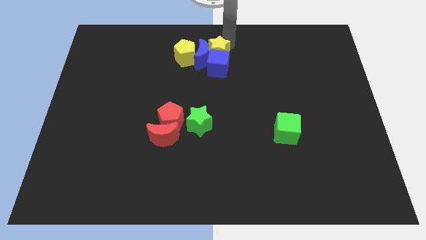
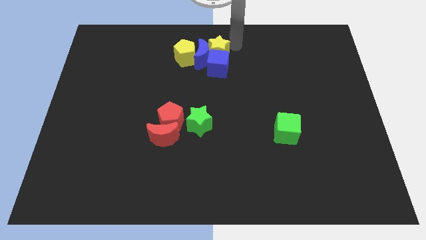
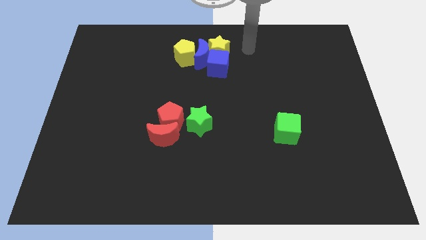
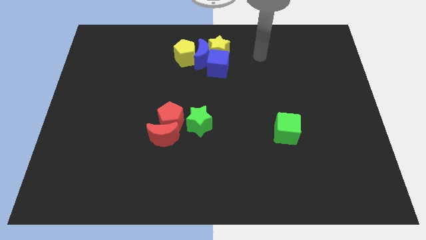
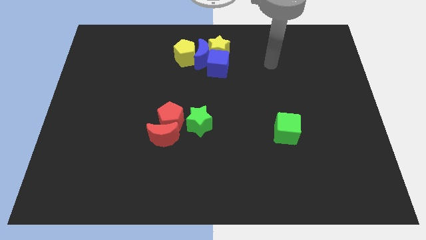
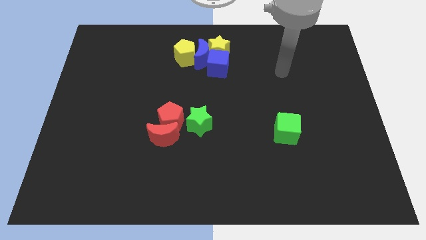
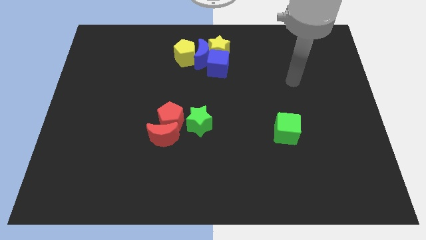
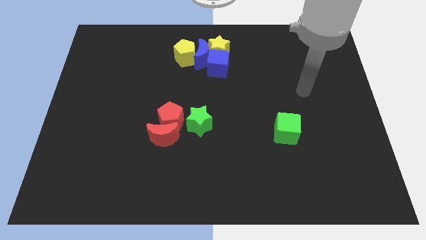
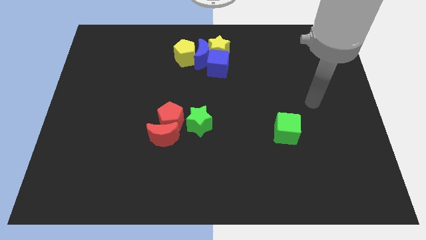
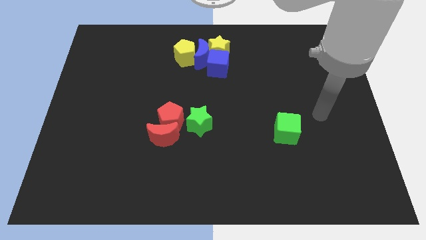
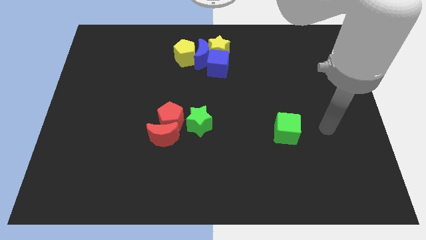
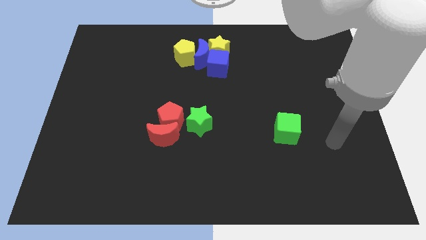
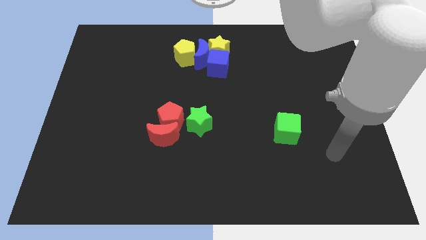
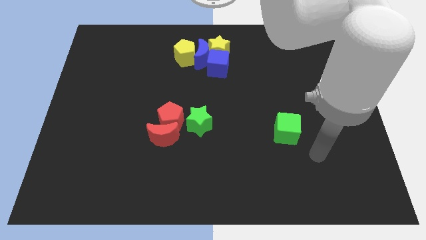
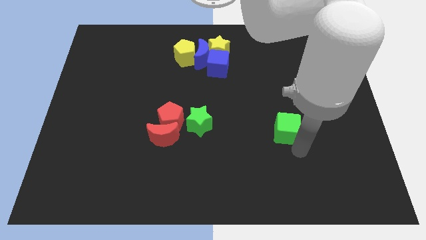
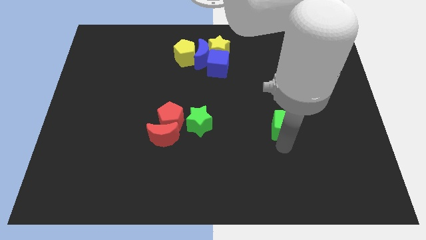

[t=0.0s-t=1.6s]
tab the bottom side of the green cube

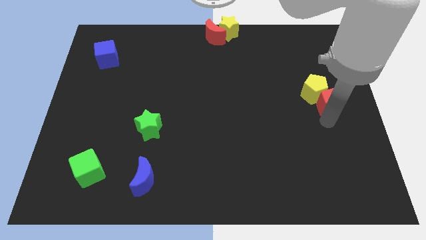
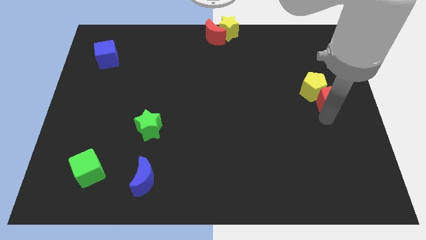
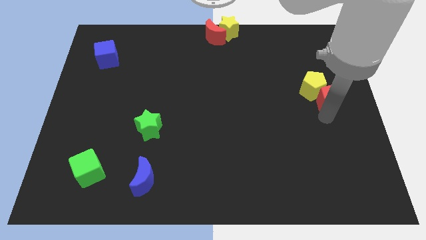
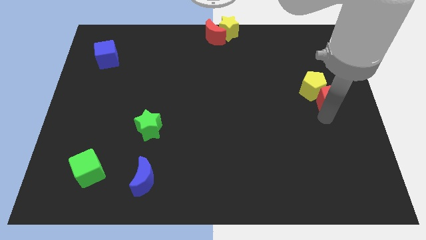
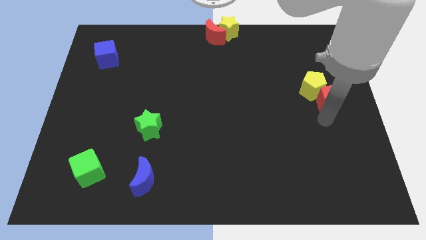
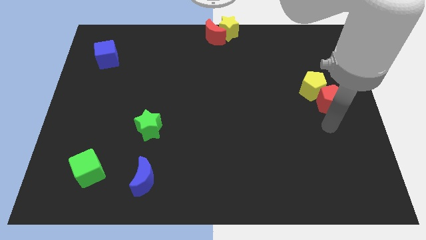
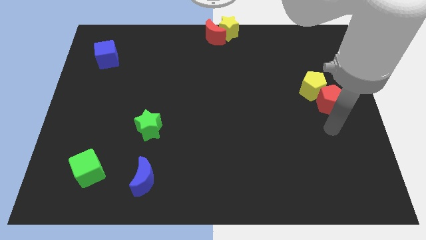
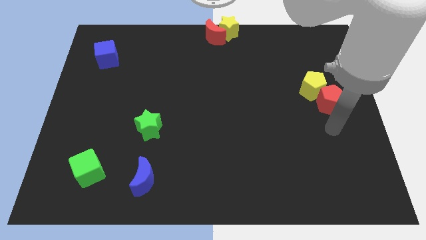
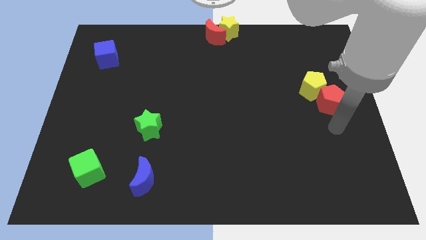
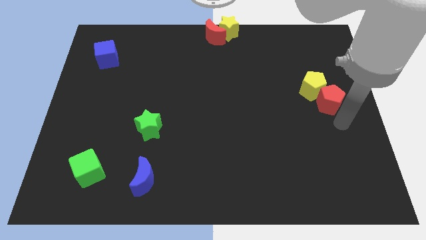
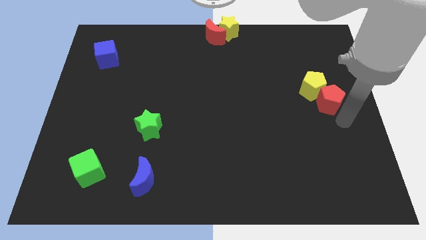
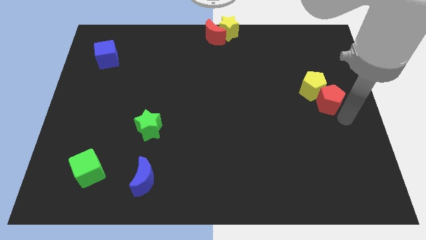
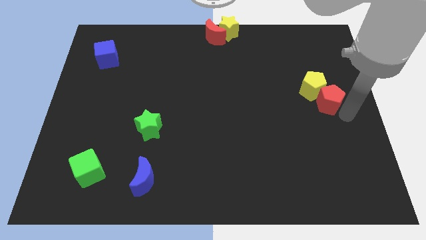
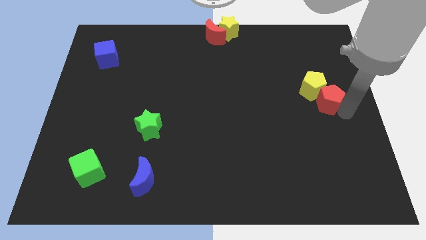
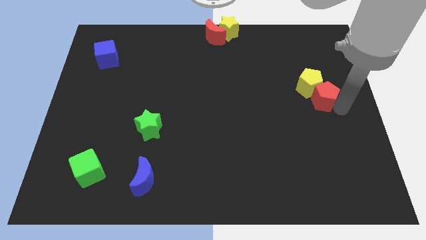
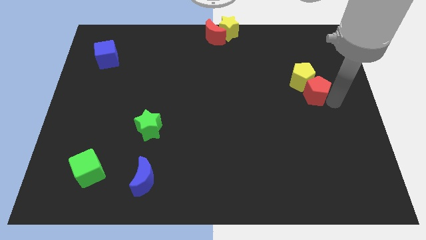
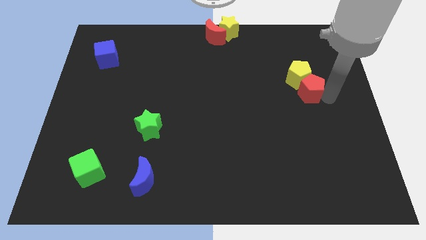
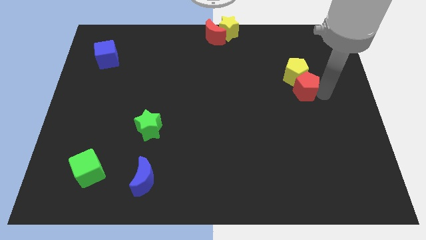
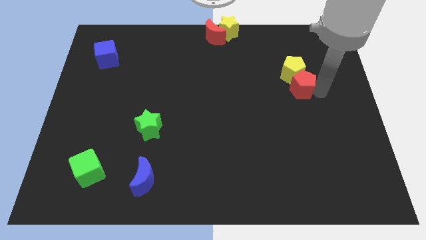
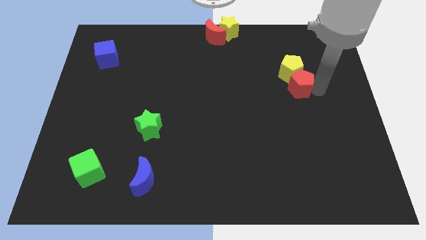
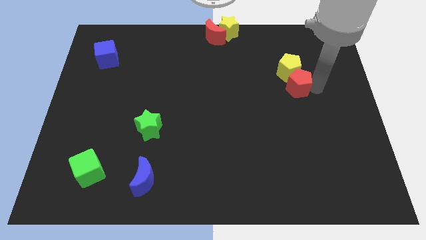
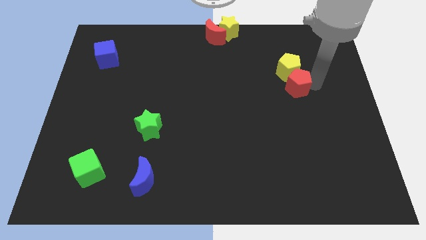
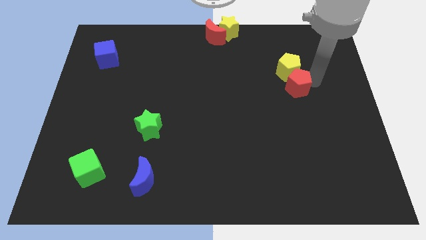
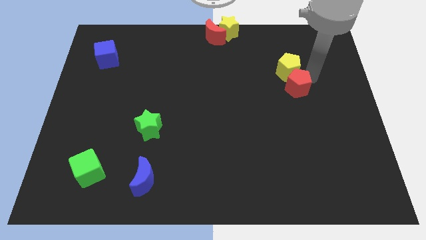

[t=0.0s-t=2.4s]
drag the yellow and red pentagon slightly to the top of the board

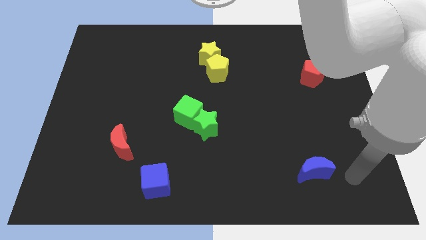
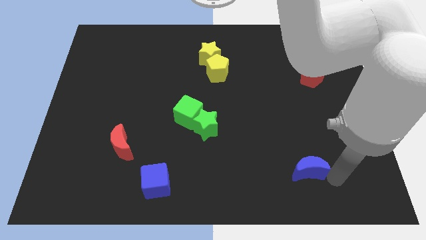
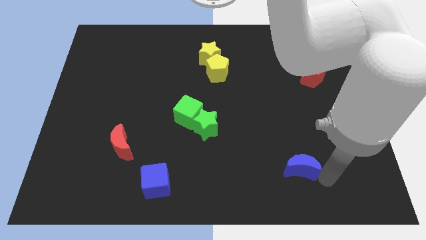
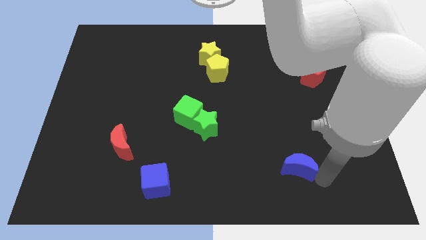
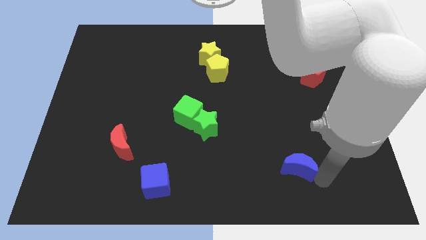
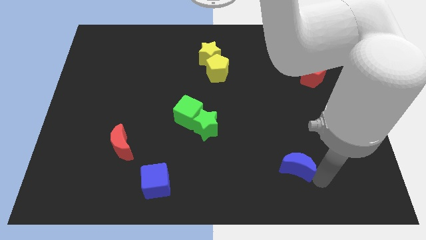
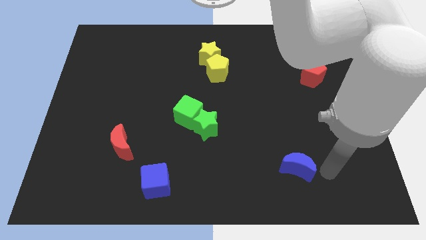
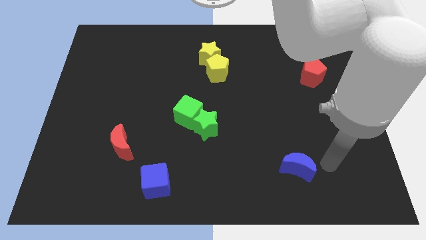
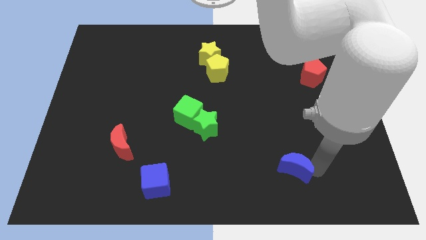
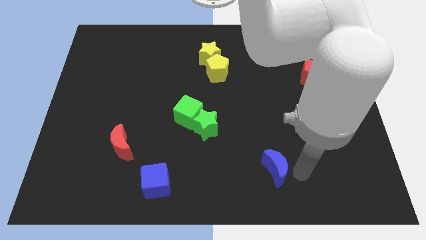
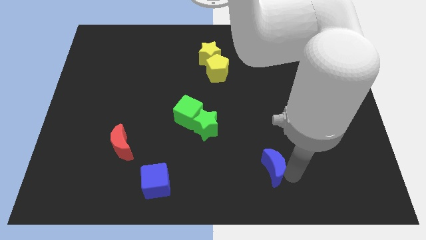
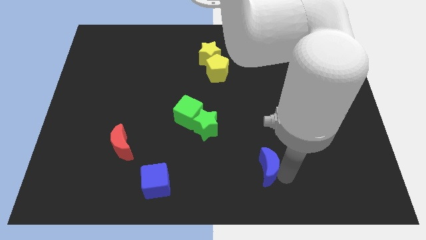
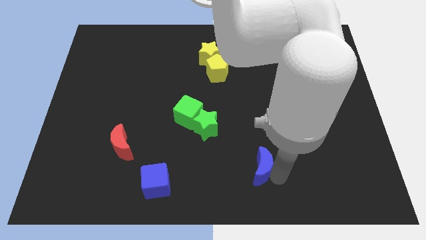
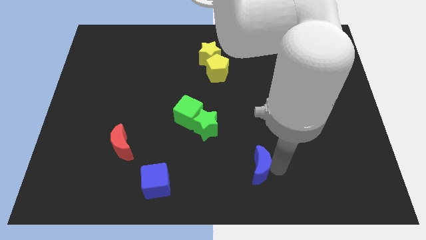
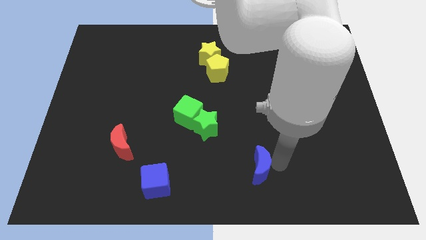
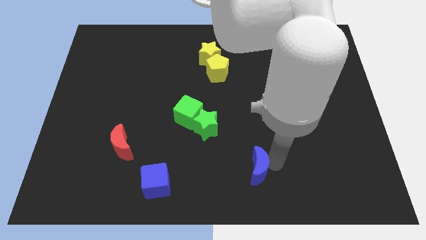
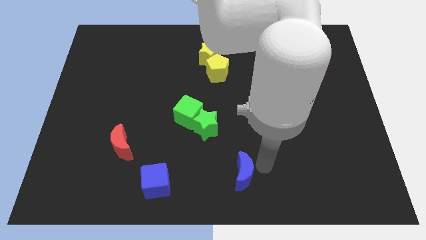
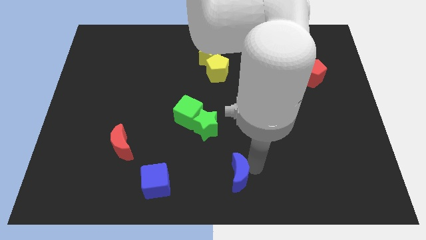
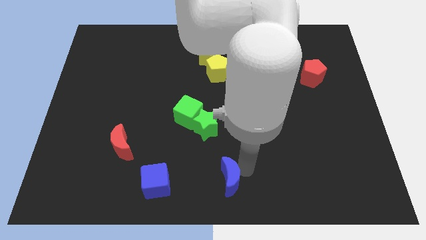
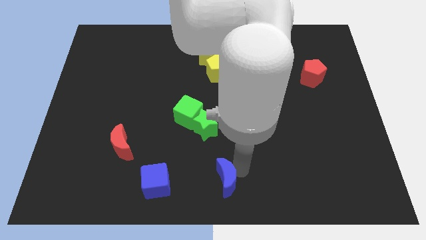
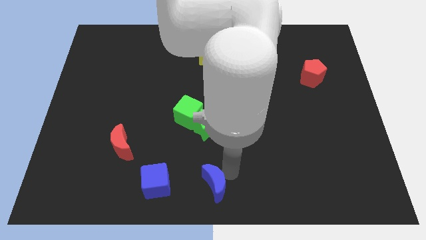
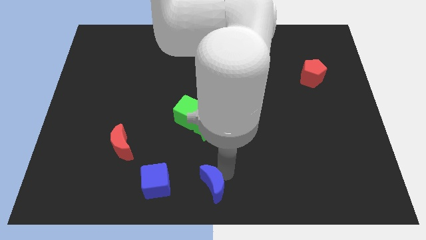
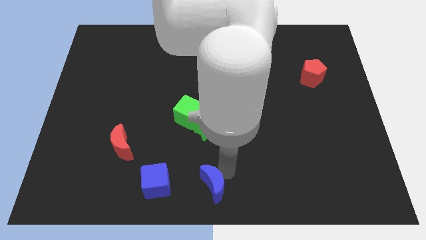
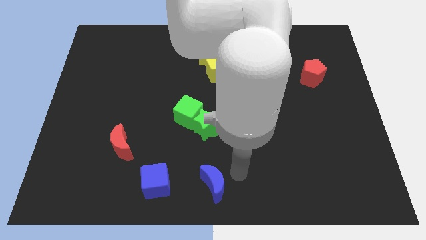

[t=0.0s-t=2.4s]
move blue crescent towards blue cube

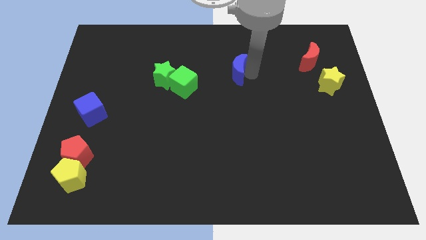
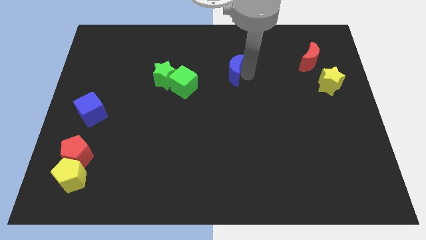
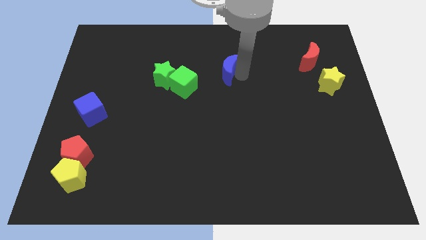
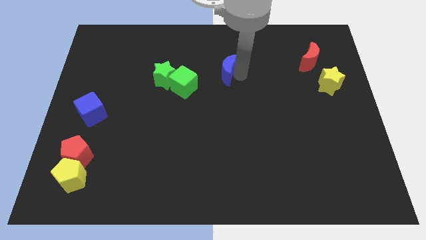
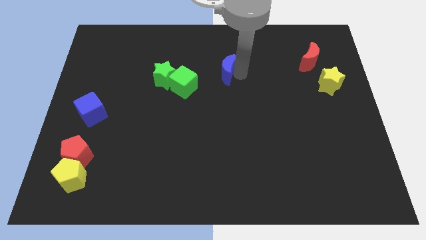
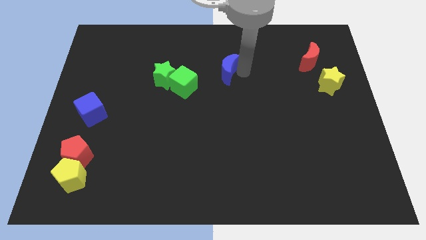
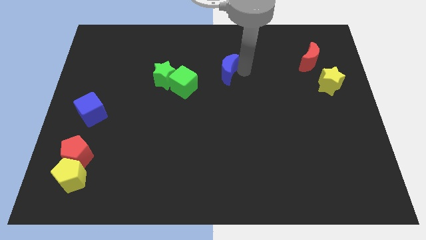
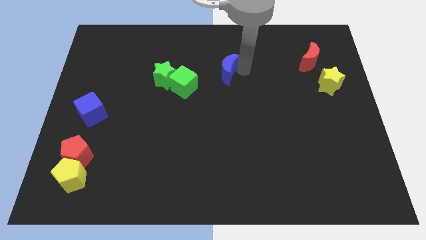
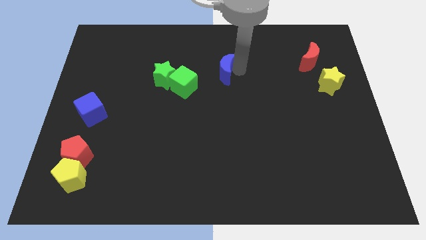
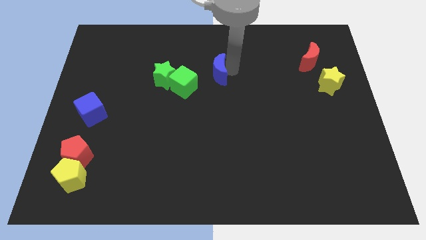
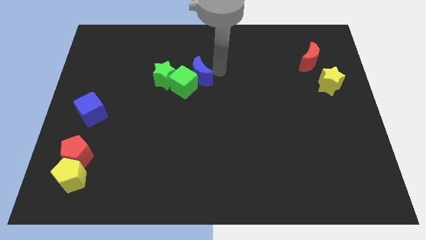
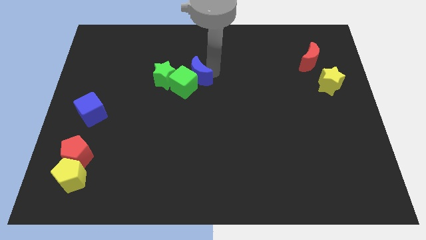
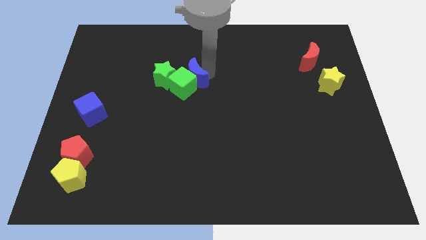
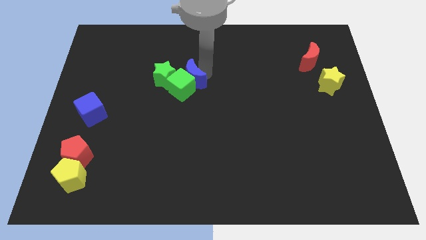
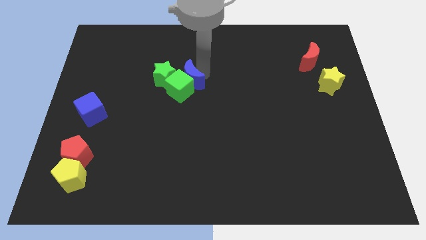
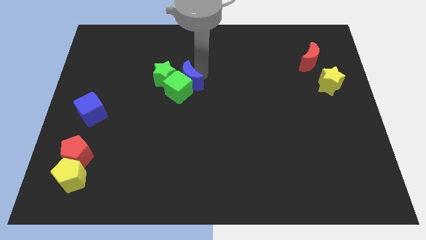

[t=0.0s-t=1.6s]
put the blue moon into the green cube

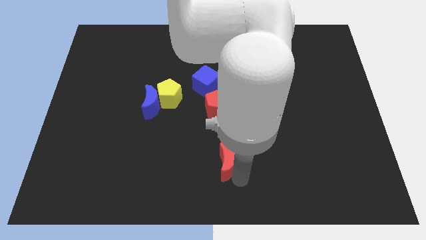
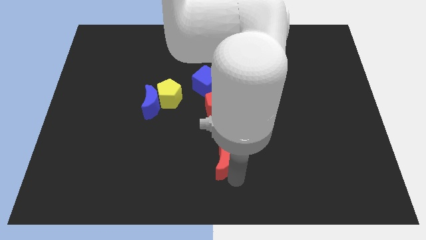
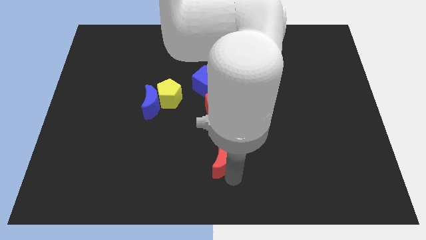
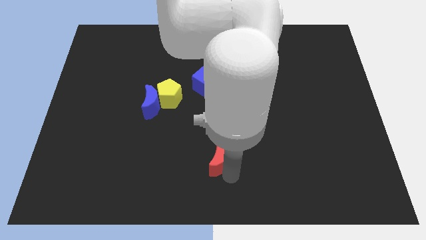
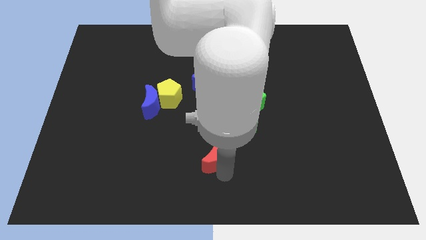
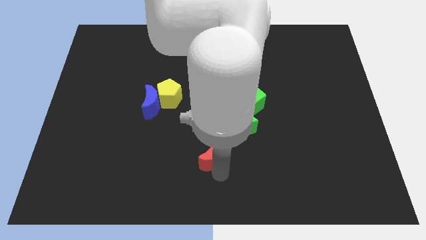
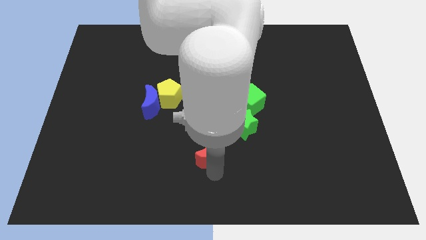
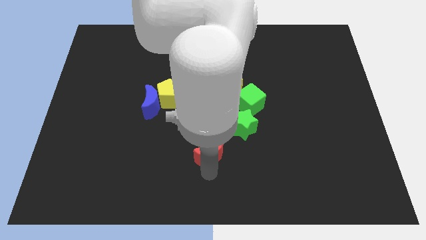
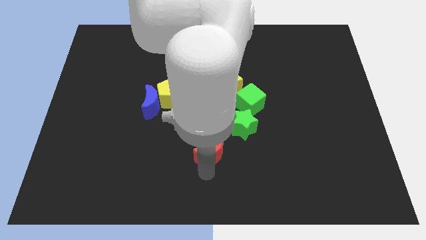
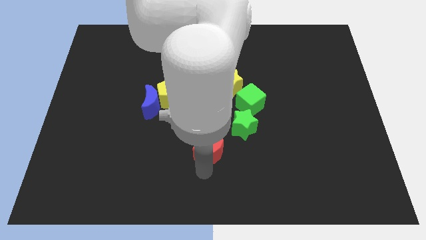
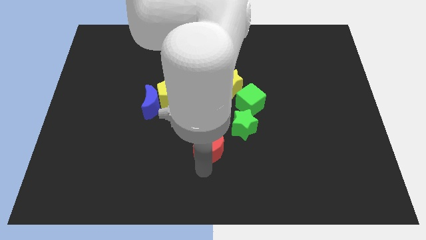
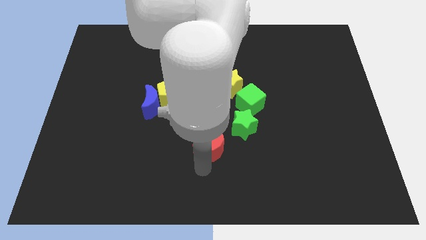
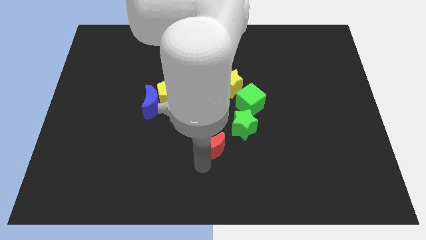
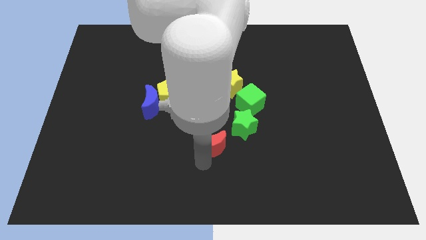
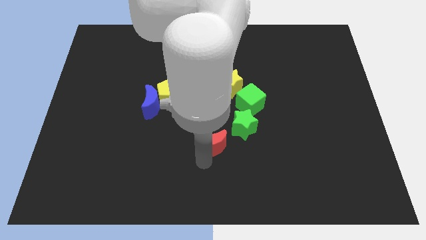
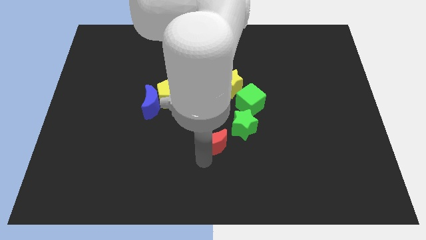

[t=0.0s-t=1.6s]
move the red moon close to the bottom left side of the green star
